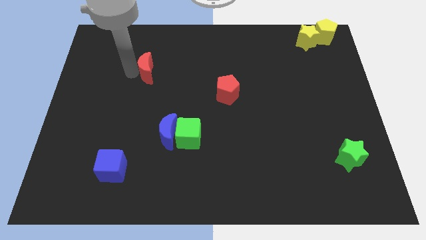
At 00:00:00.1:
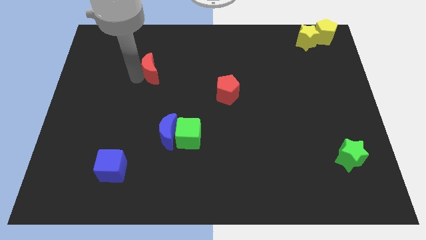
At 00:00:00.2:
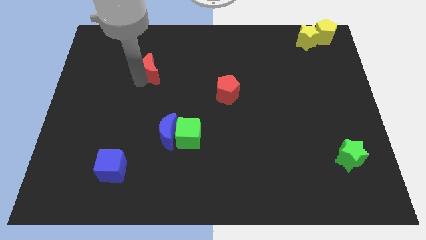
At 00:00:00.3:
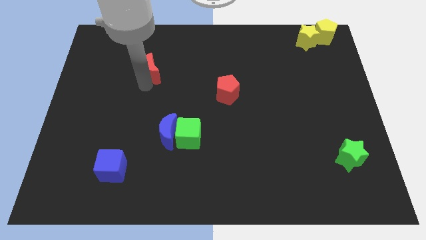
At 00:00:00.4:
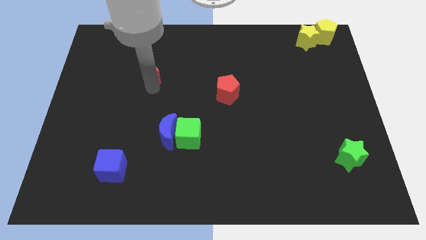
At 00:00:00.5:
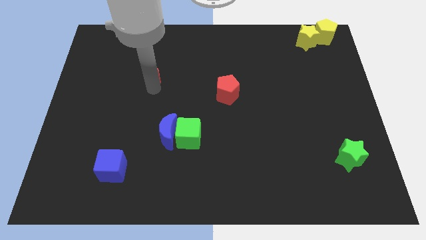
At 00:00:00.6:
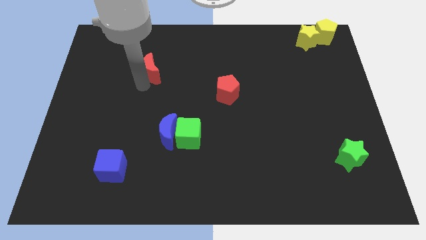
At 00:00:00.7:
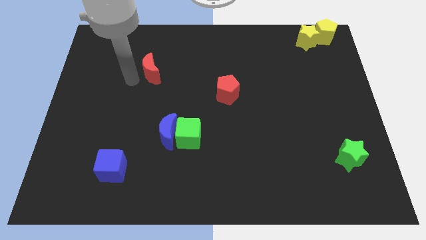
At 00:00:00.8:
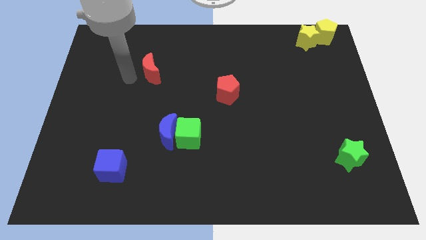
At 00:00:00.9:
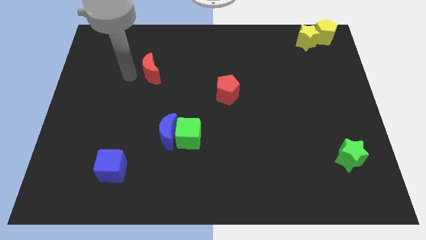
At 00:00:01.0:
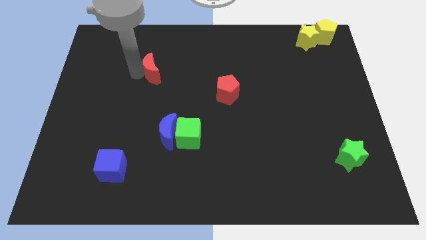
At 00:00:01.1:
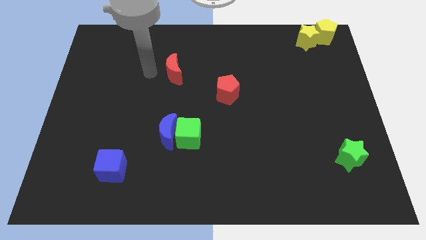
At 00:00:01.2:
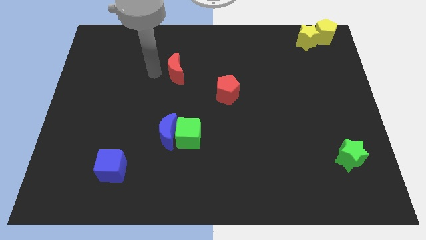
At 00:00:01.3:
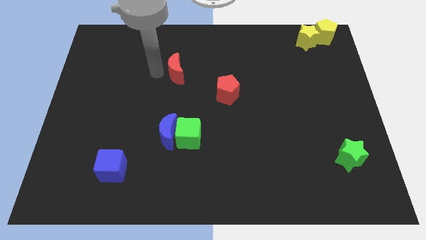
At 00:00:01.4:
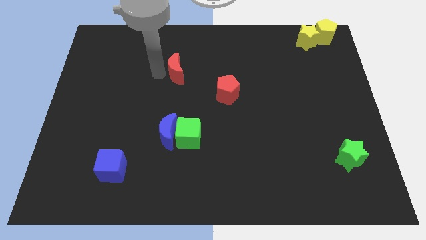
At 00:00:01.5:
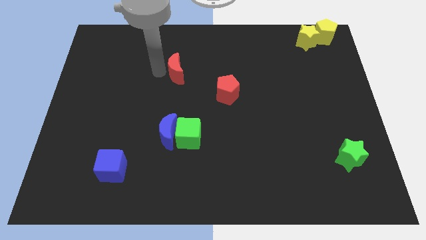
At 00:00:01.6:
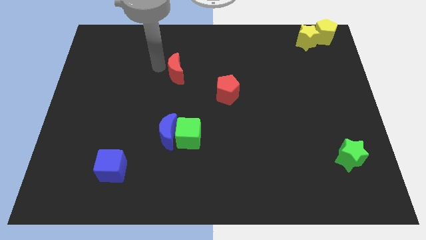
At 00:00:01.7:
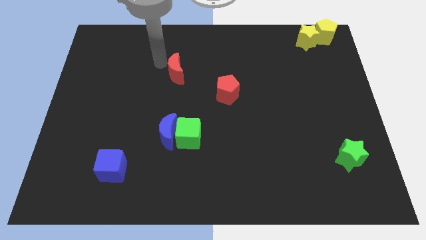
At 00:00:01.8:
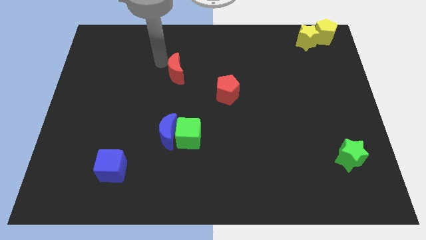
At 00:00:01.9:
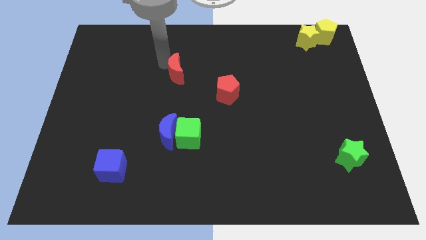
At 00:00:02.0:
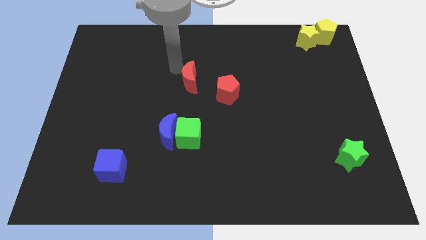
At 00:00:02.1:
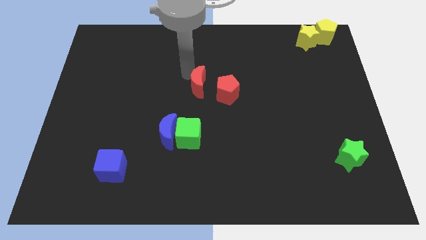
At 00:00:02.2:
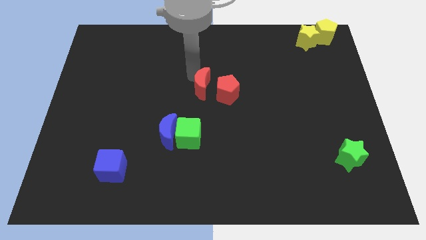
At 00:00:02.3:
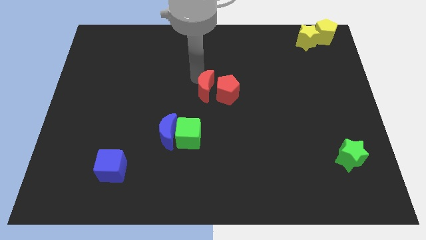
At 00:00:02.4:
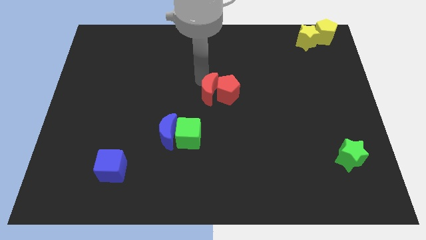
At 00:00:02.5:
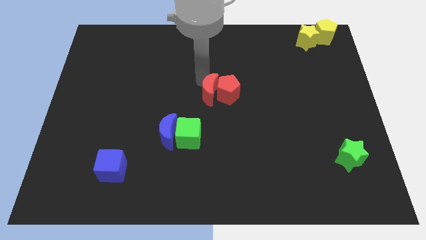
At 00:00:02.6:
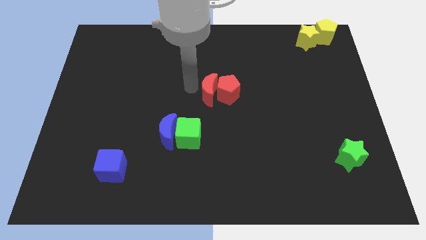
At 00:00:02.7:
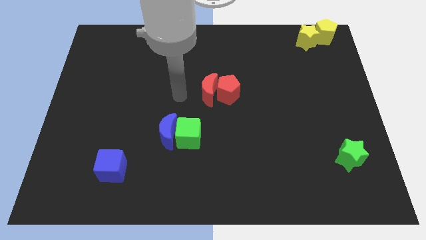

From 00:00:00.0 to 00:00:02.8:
move the red moon into the red pentagon at the center

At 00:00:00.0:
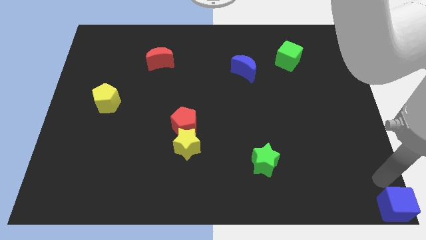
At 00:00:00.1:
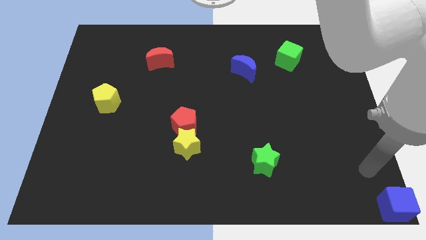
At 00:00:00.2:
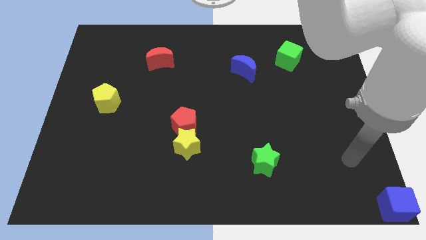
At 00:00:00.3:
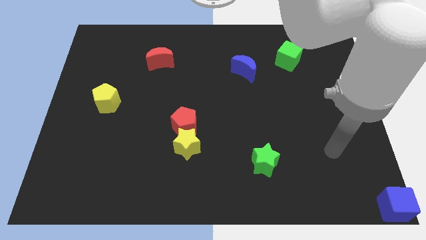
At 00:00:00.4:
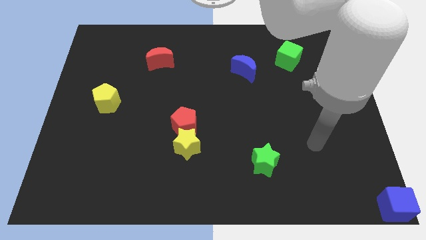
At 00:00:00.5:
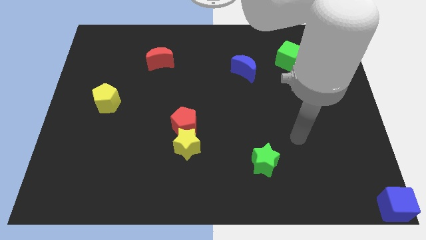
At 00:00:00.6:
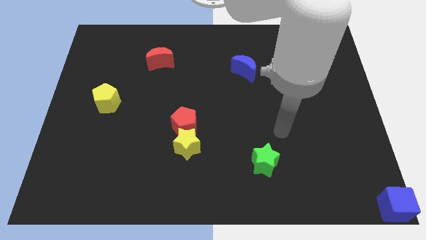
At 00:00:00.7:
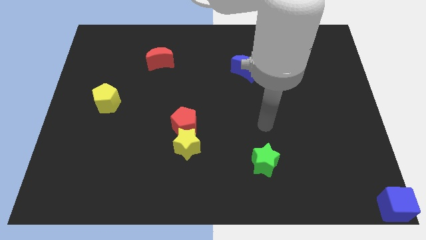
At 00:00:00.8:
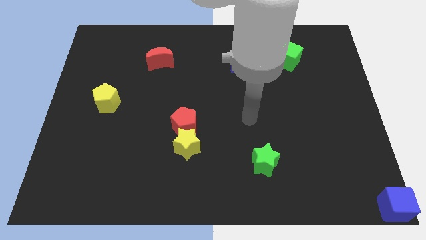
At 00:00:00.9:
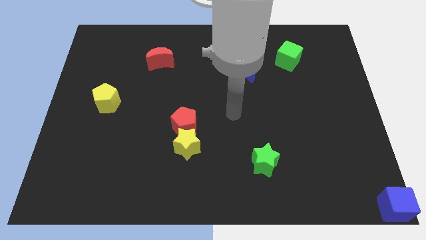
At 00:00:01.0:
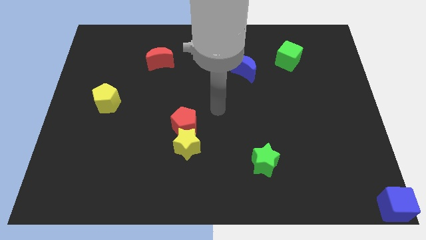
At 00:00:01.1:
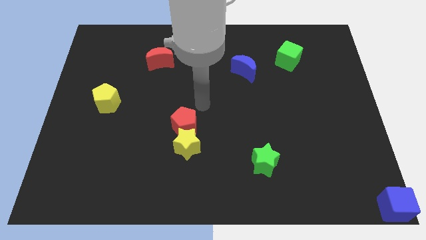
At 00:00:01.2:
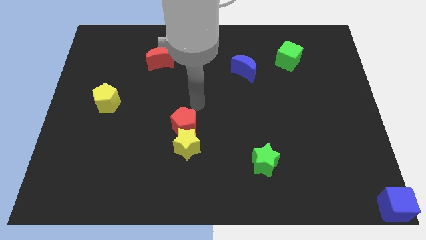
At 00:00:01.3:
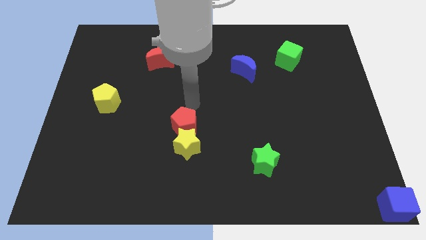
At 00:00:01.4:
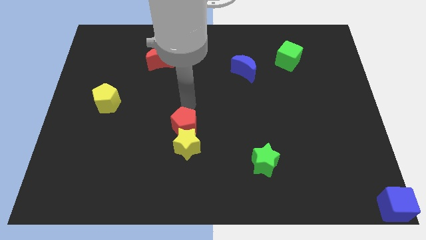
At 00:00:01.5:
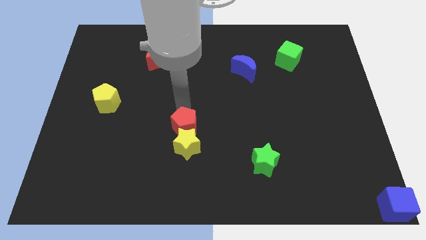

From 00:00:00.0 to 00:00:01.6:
place your hand above the red pentagon

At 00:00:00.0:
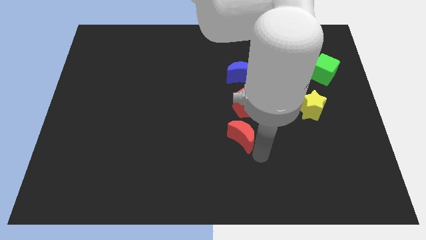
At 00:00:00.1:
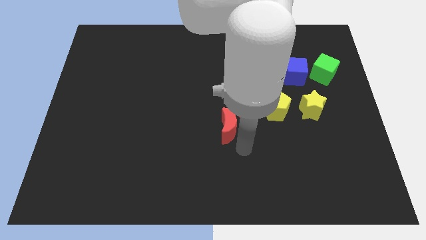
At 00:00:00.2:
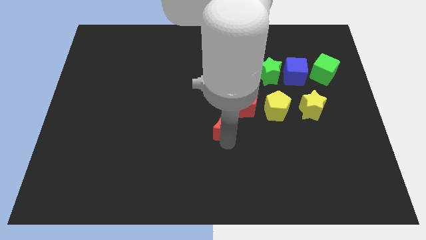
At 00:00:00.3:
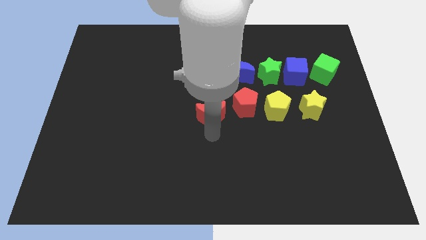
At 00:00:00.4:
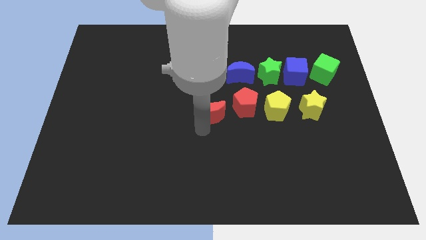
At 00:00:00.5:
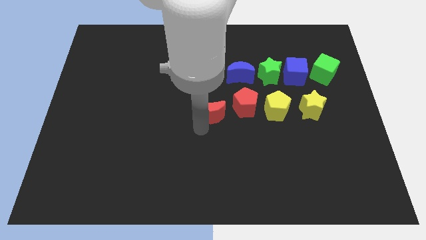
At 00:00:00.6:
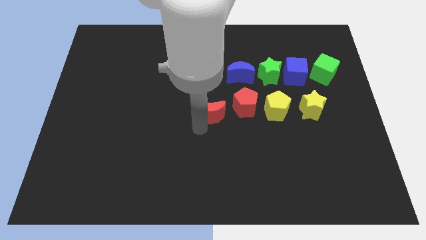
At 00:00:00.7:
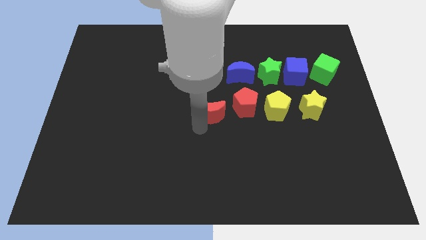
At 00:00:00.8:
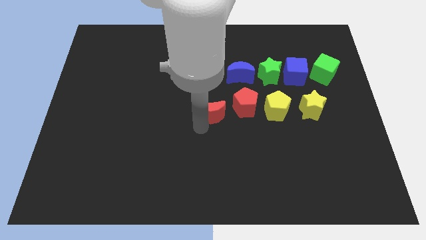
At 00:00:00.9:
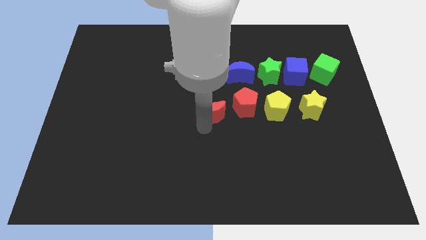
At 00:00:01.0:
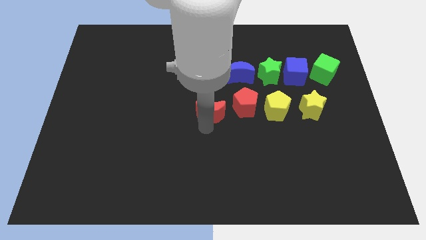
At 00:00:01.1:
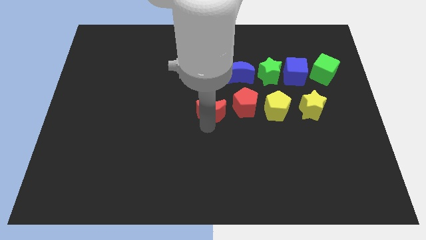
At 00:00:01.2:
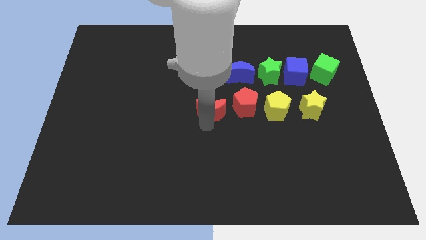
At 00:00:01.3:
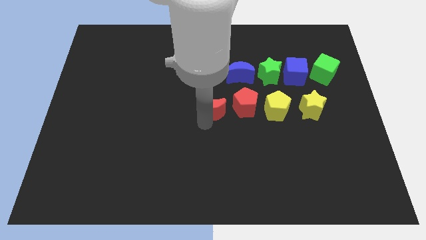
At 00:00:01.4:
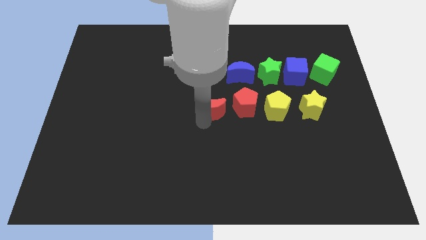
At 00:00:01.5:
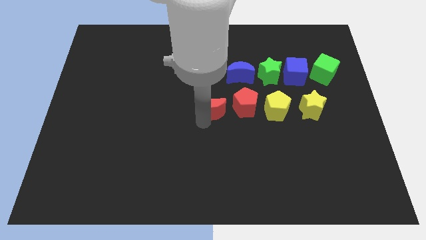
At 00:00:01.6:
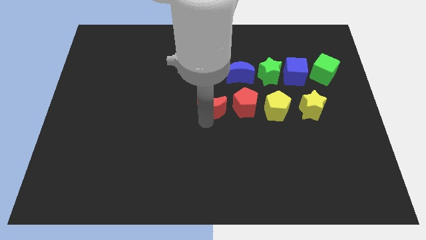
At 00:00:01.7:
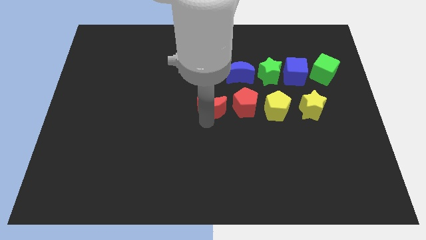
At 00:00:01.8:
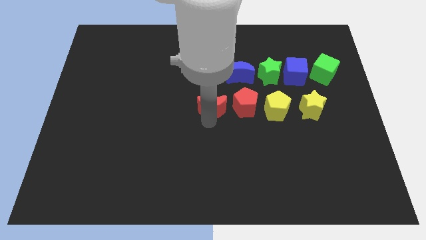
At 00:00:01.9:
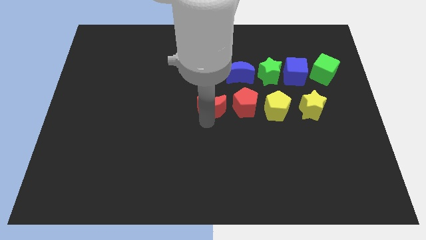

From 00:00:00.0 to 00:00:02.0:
place the red moon on the left side of the red pentagon

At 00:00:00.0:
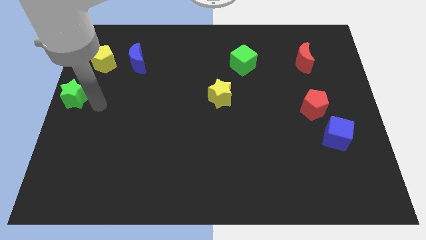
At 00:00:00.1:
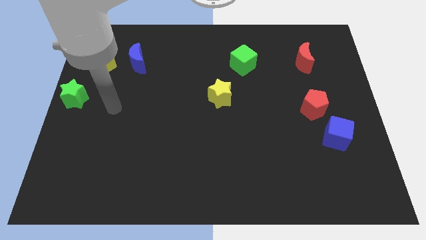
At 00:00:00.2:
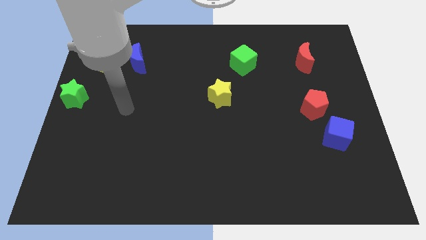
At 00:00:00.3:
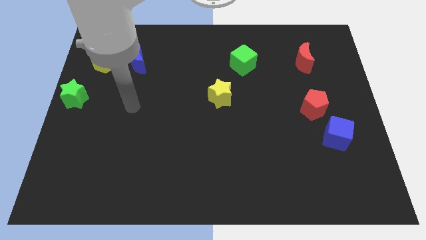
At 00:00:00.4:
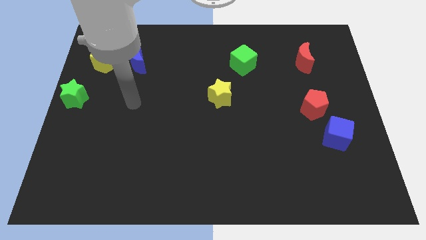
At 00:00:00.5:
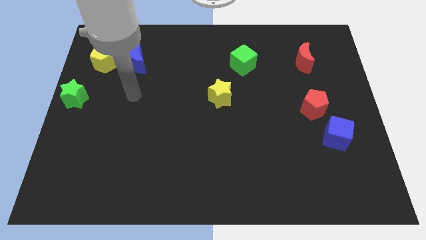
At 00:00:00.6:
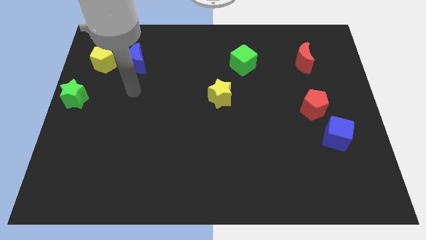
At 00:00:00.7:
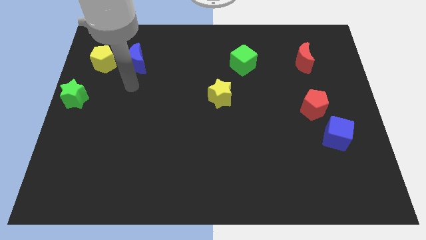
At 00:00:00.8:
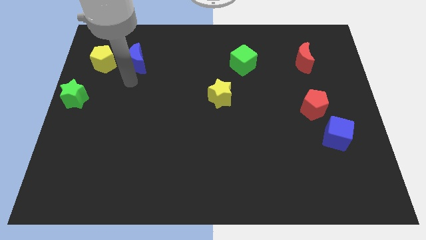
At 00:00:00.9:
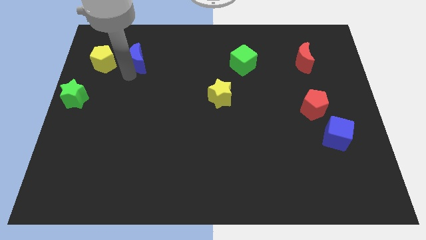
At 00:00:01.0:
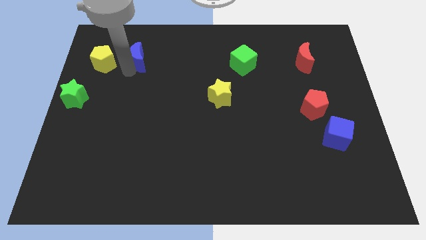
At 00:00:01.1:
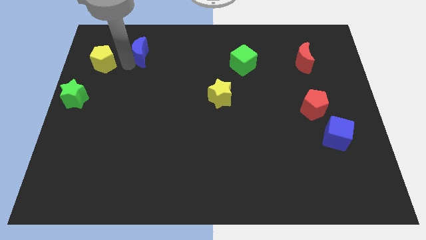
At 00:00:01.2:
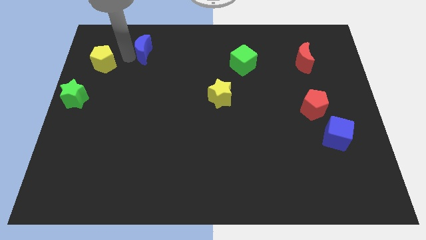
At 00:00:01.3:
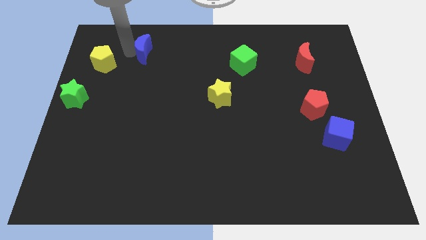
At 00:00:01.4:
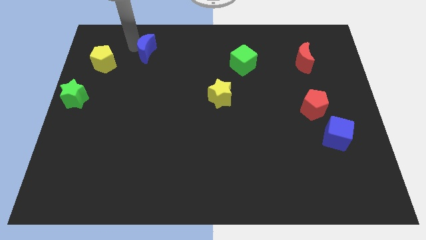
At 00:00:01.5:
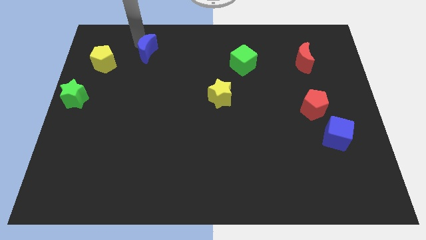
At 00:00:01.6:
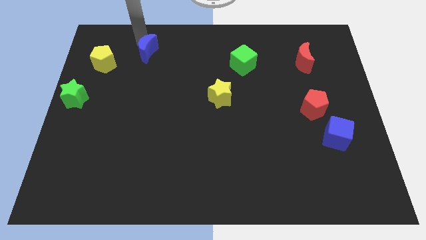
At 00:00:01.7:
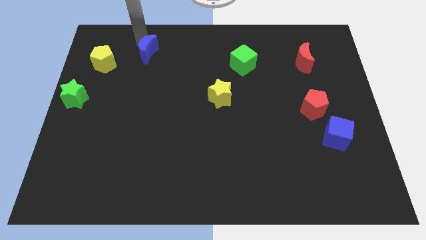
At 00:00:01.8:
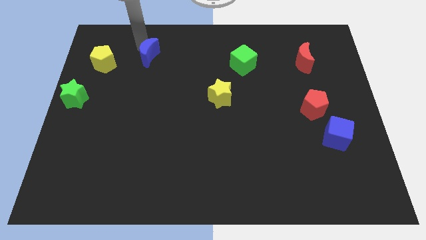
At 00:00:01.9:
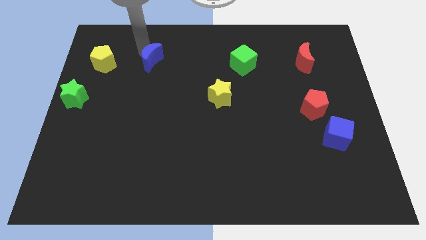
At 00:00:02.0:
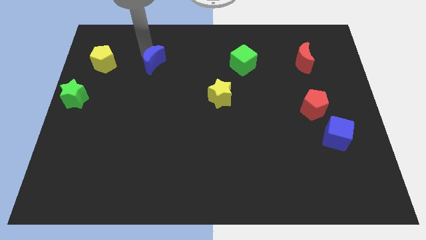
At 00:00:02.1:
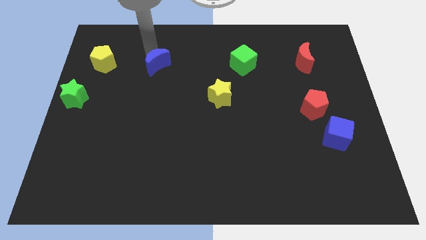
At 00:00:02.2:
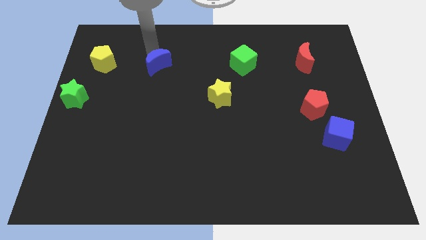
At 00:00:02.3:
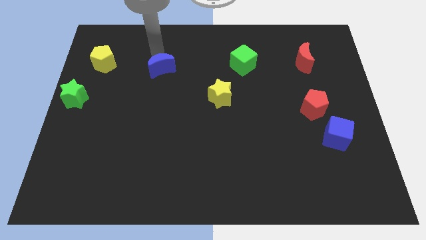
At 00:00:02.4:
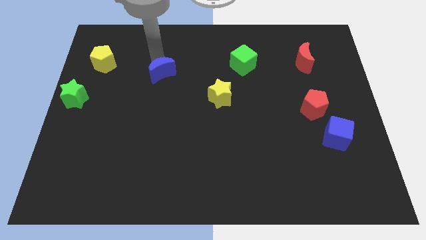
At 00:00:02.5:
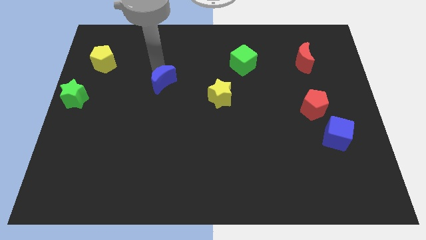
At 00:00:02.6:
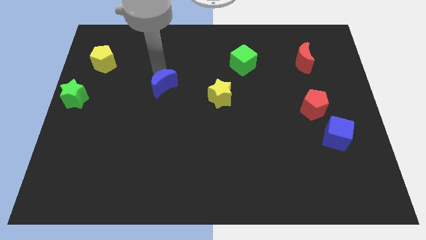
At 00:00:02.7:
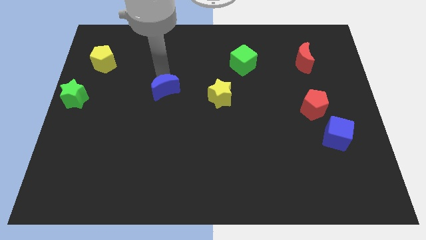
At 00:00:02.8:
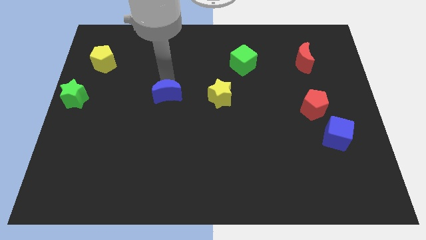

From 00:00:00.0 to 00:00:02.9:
place the blue crescent to the left of the yellow star
